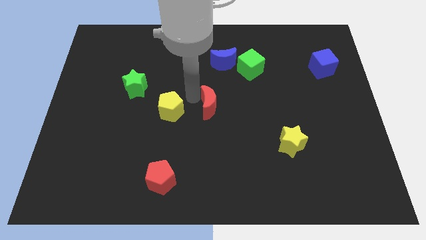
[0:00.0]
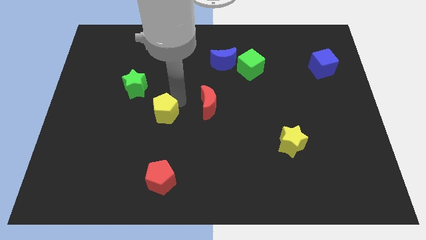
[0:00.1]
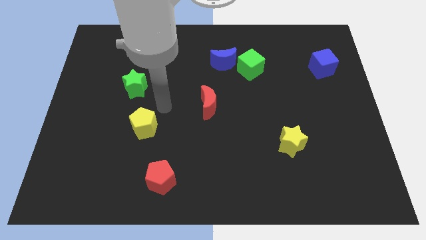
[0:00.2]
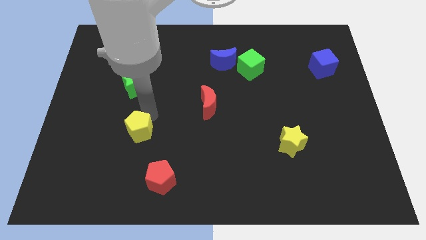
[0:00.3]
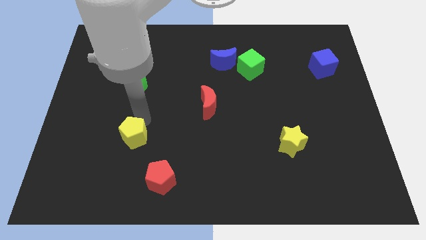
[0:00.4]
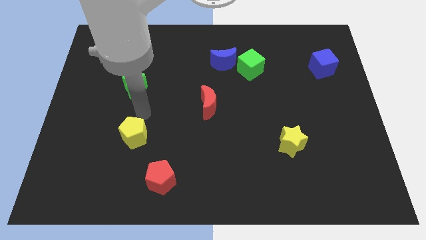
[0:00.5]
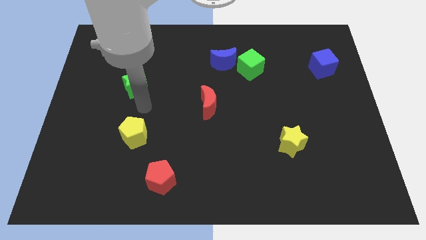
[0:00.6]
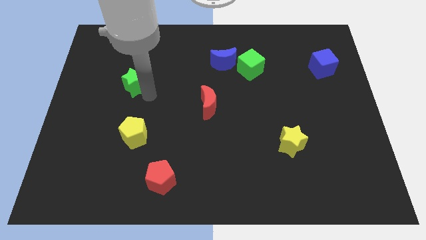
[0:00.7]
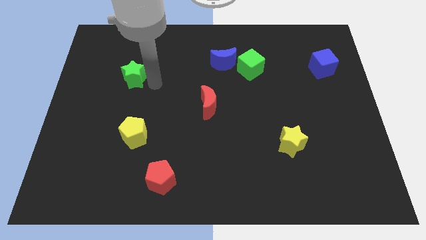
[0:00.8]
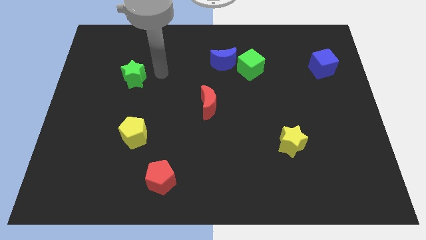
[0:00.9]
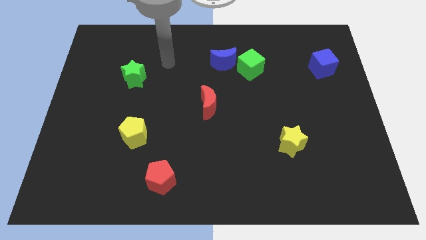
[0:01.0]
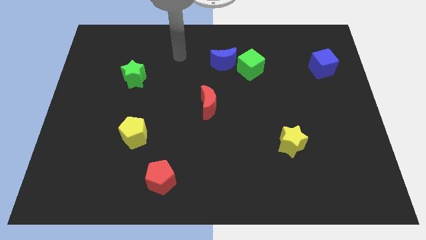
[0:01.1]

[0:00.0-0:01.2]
separate the yellow pentagon from the red crescent

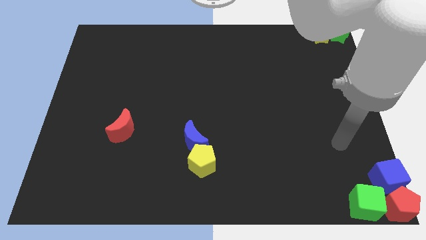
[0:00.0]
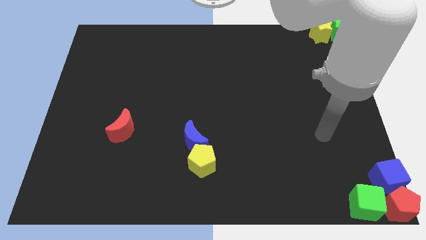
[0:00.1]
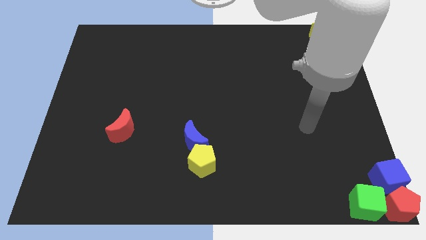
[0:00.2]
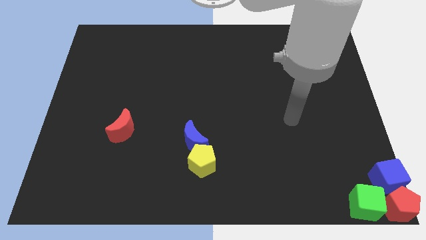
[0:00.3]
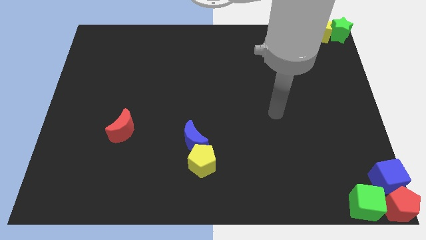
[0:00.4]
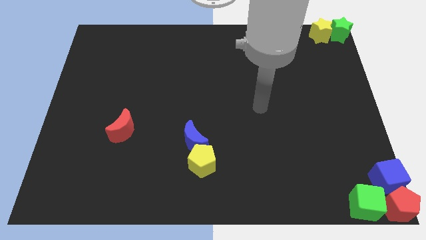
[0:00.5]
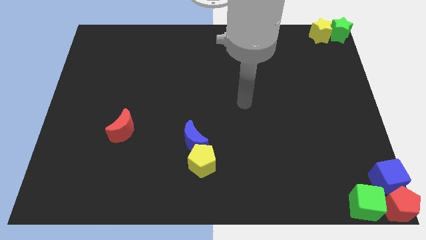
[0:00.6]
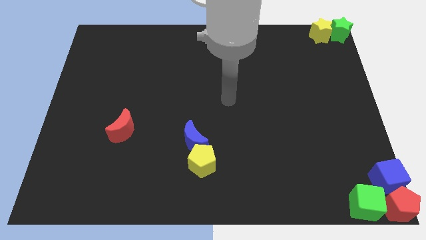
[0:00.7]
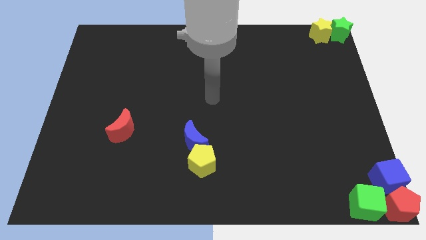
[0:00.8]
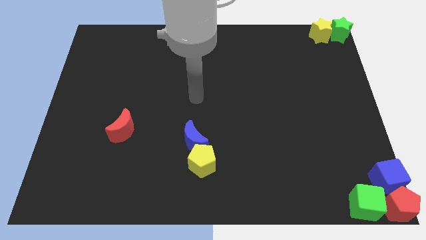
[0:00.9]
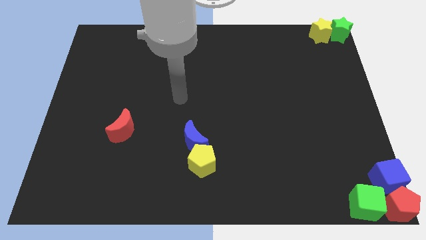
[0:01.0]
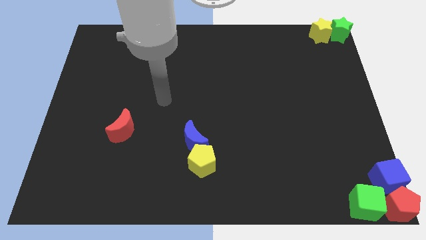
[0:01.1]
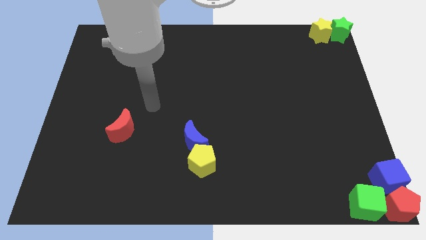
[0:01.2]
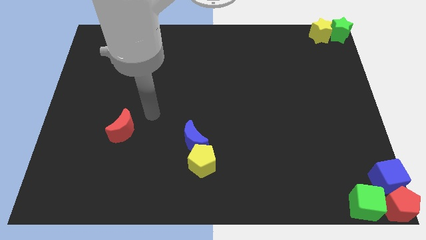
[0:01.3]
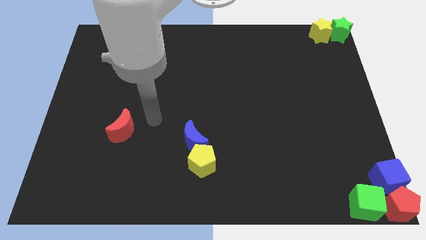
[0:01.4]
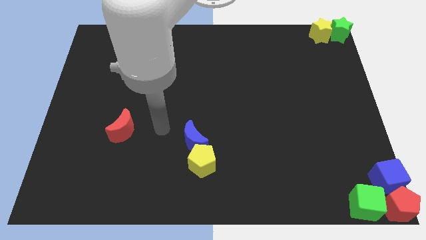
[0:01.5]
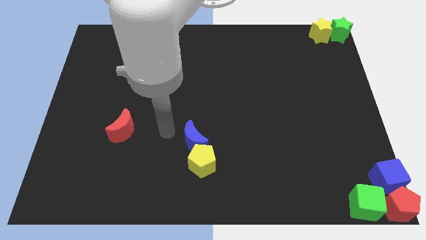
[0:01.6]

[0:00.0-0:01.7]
move your arm in the empty space from the right to left

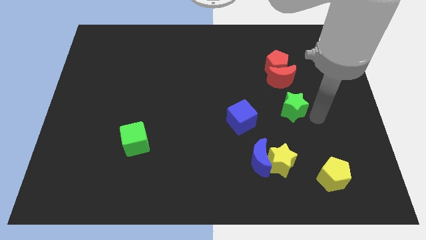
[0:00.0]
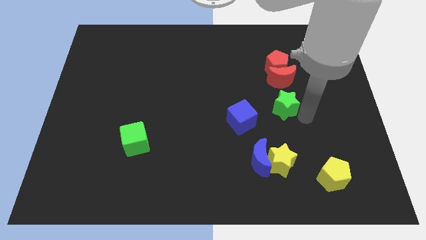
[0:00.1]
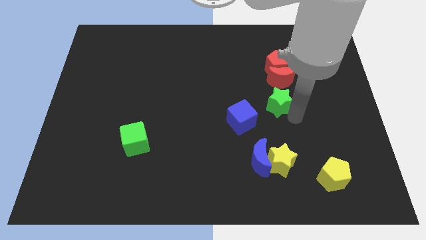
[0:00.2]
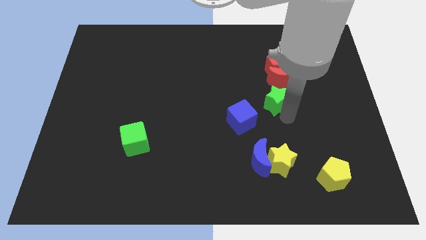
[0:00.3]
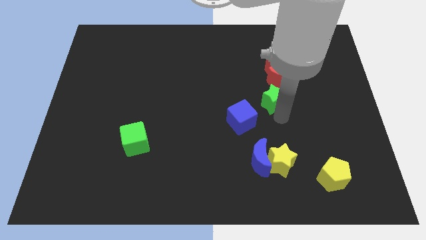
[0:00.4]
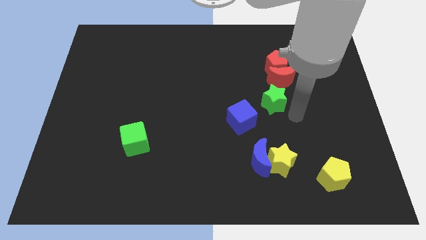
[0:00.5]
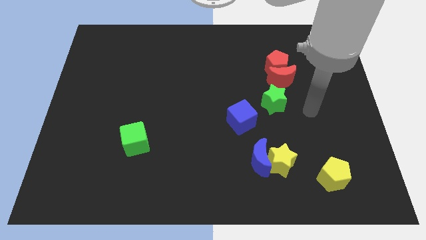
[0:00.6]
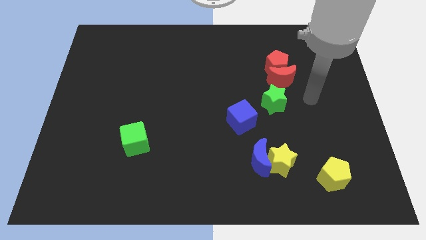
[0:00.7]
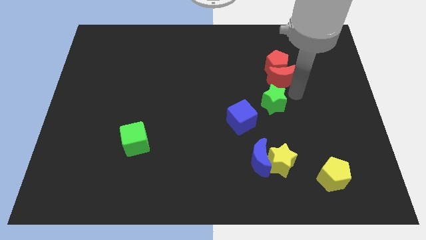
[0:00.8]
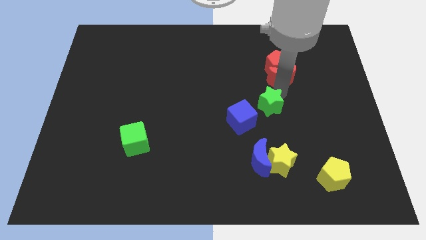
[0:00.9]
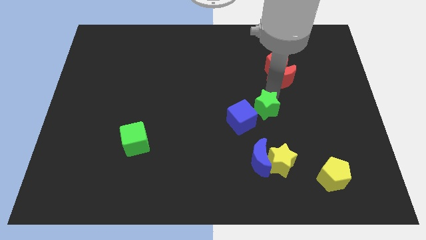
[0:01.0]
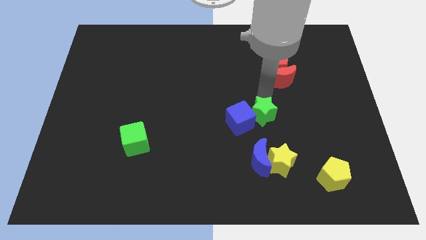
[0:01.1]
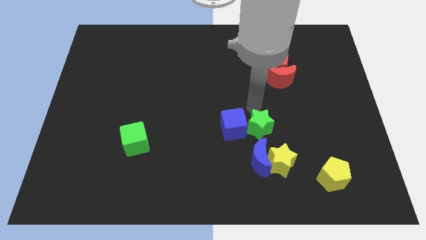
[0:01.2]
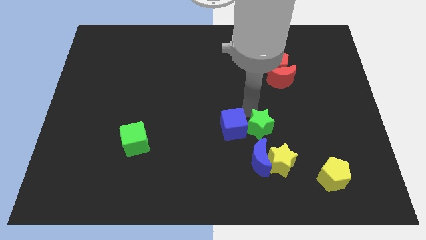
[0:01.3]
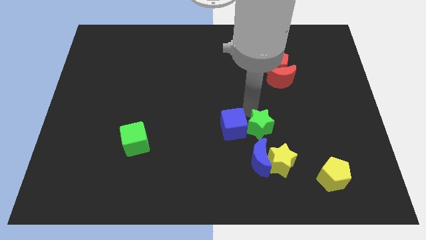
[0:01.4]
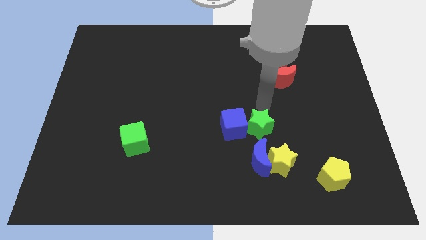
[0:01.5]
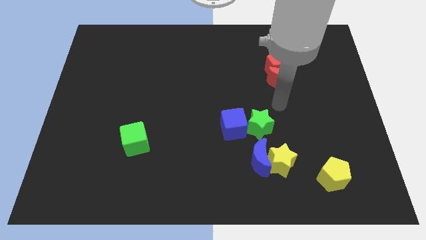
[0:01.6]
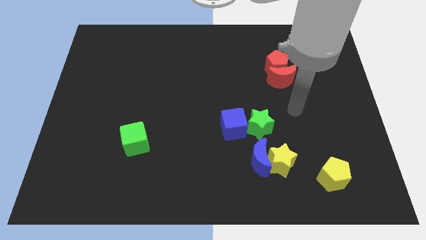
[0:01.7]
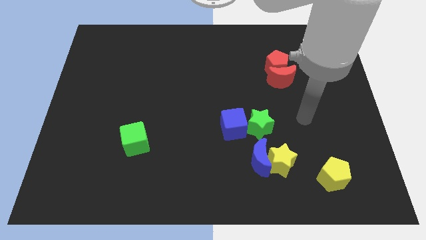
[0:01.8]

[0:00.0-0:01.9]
put the green star into the blue cube

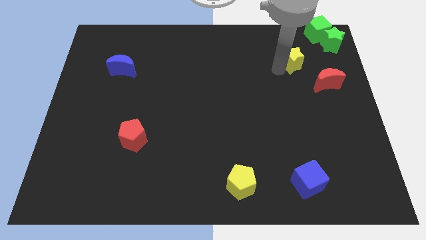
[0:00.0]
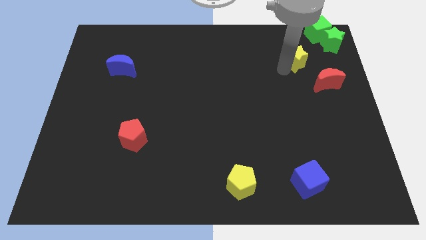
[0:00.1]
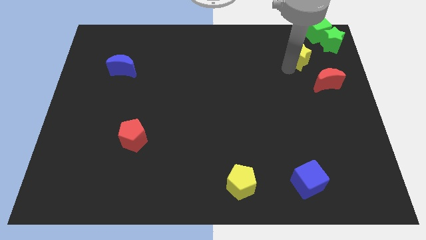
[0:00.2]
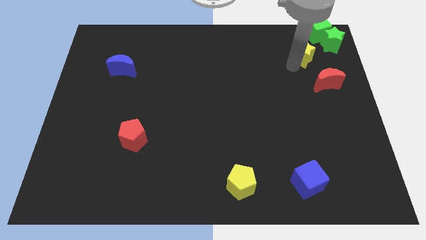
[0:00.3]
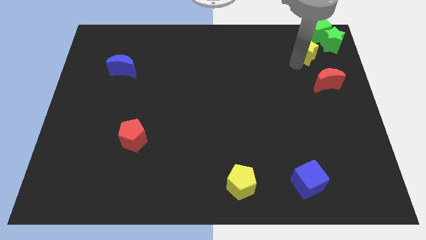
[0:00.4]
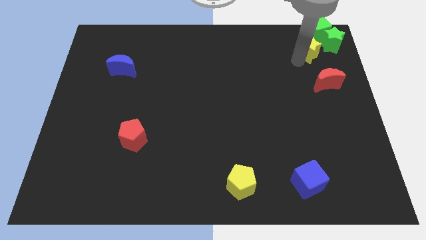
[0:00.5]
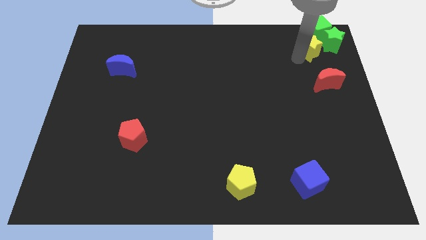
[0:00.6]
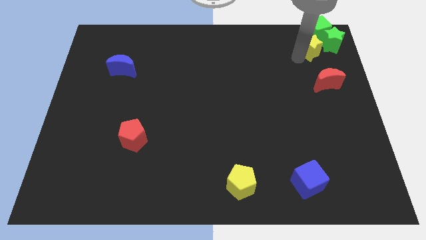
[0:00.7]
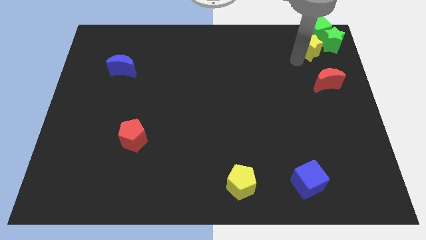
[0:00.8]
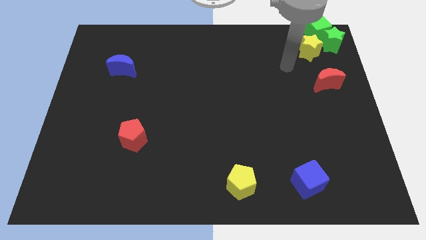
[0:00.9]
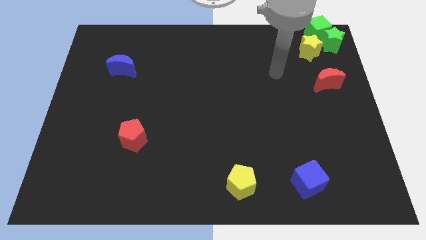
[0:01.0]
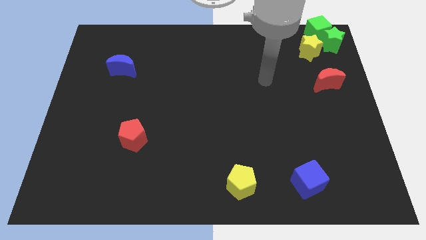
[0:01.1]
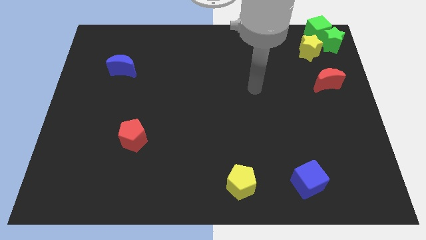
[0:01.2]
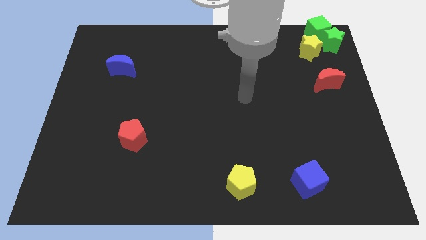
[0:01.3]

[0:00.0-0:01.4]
move the yellow star to the top right corner

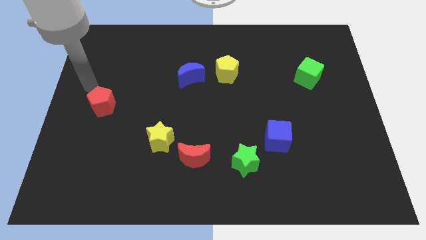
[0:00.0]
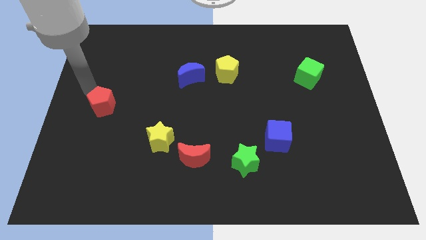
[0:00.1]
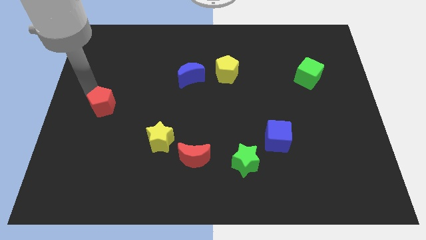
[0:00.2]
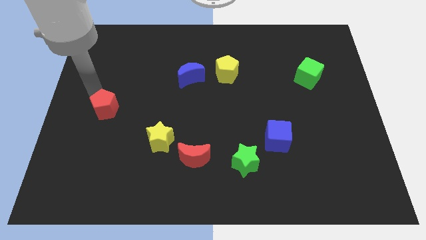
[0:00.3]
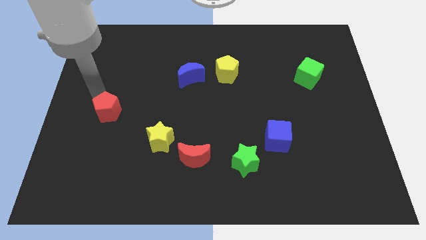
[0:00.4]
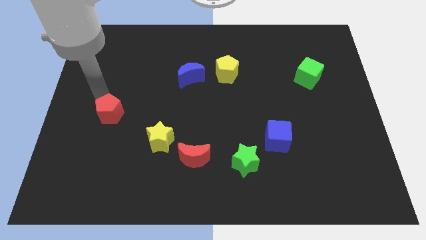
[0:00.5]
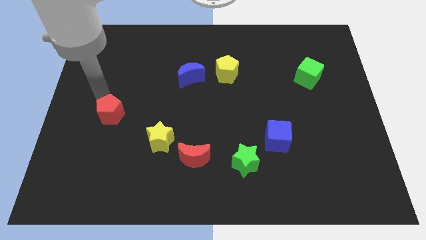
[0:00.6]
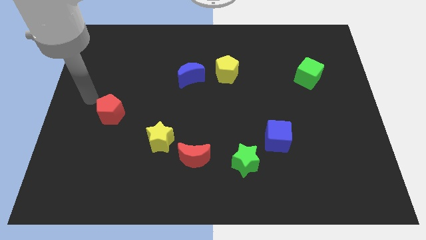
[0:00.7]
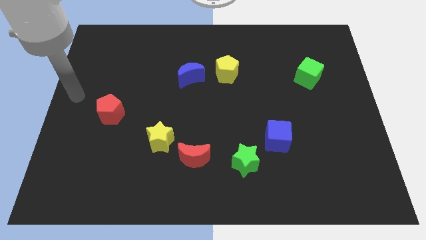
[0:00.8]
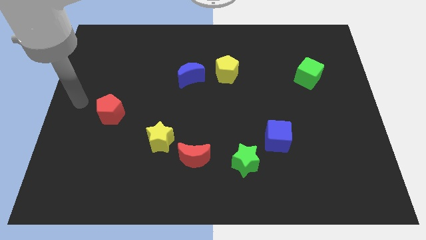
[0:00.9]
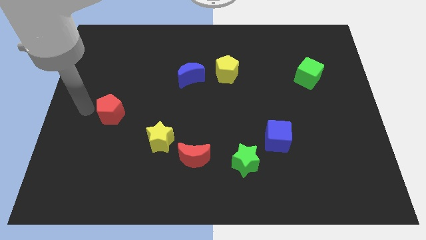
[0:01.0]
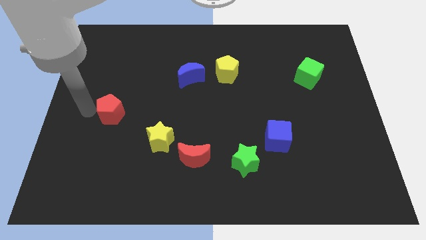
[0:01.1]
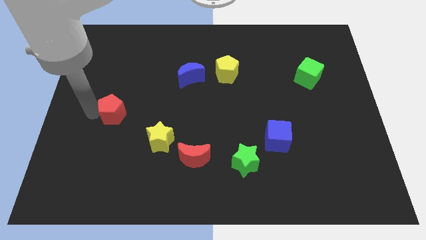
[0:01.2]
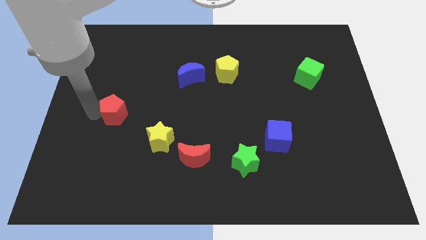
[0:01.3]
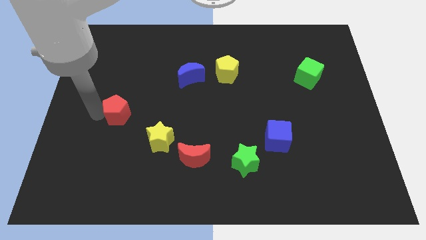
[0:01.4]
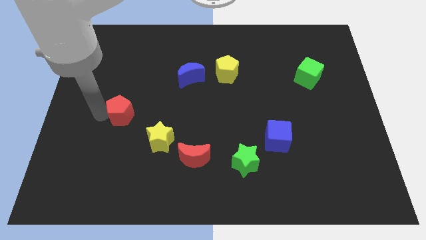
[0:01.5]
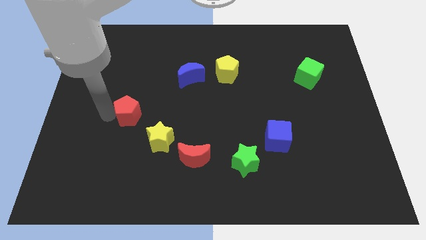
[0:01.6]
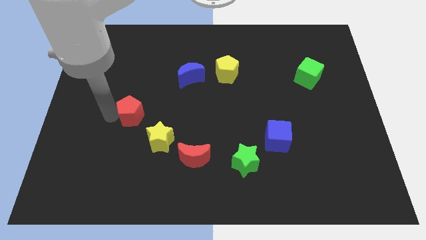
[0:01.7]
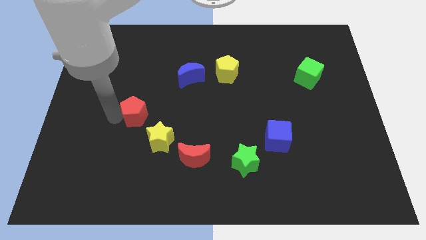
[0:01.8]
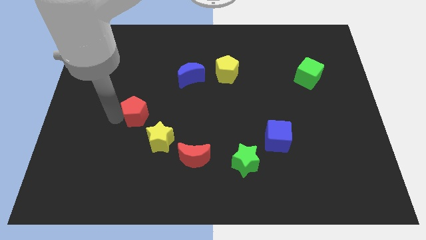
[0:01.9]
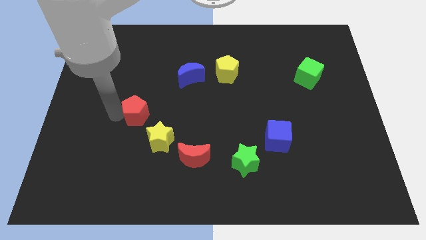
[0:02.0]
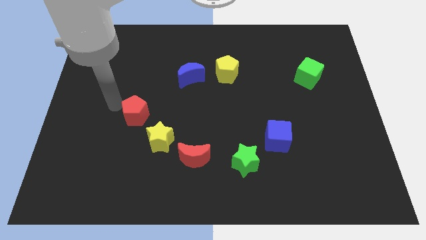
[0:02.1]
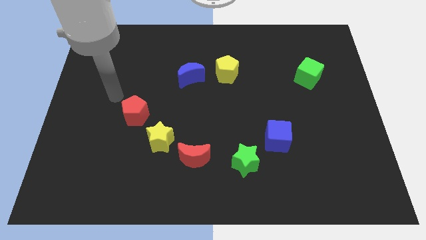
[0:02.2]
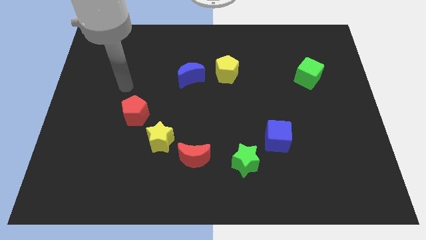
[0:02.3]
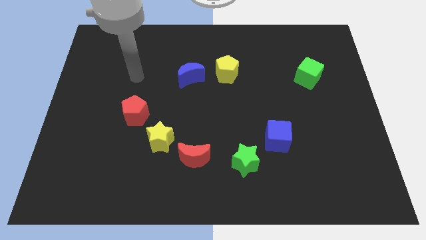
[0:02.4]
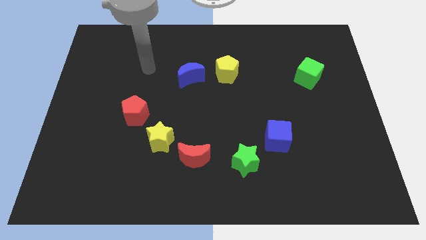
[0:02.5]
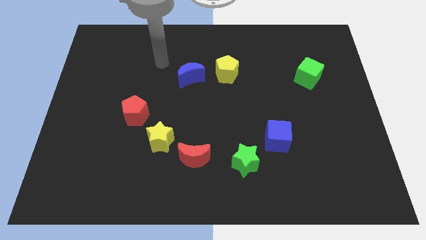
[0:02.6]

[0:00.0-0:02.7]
move the red pentagon near to the yellow star
